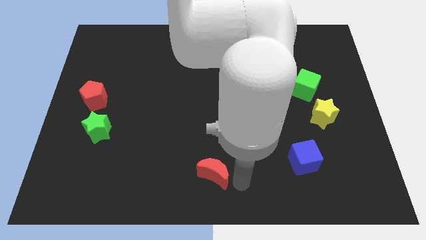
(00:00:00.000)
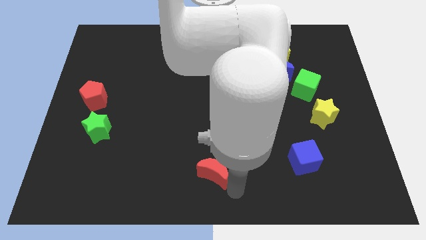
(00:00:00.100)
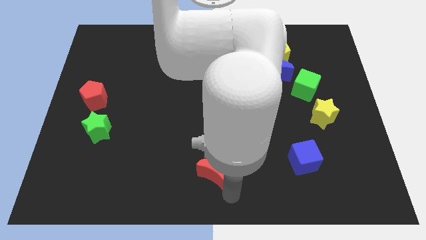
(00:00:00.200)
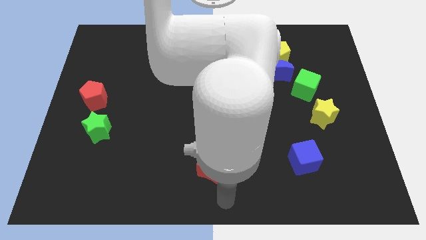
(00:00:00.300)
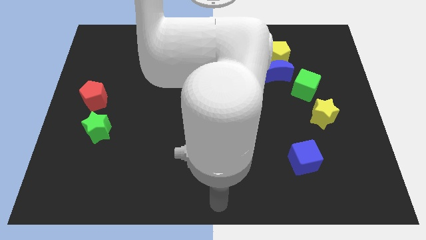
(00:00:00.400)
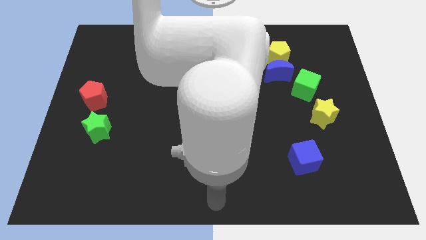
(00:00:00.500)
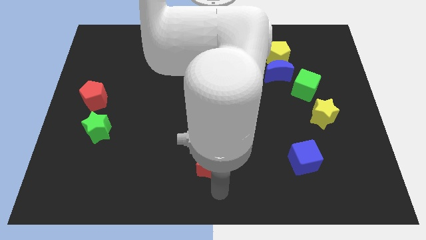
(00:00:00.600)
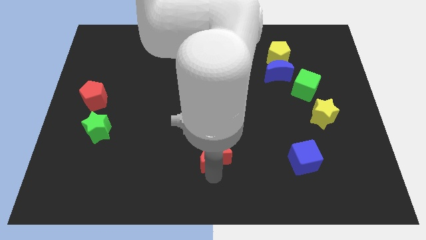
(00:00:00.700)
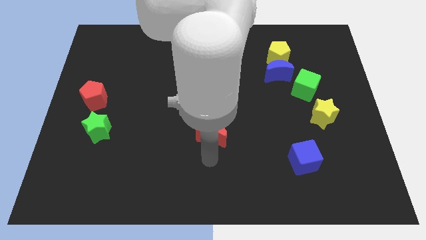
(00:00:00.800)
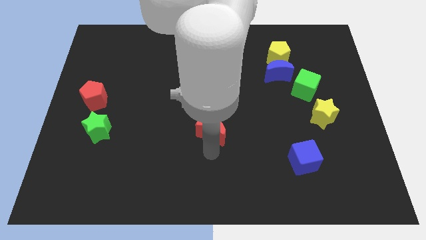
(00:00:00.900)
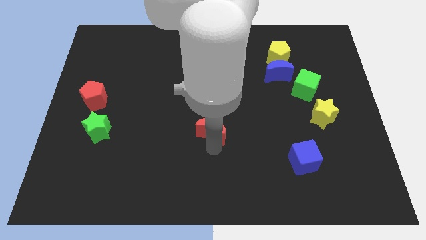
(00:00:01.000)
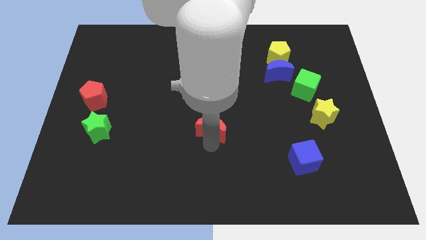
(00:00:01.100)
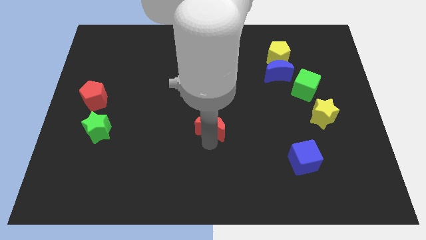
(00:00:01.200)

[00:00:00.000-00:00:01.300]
move the red crescent towards the center of the board

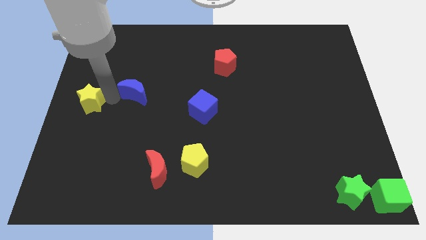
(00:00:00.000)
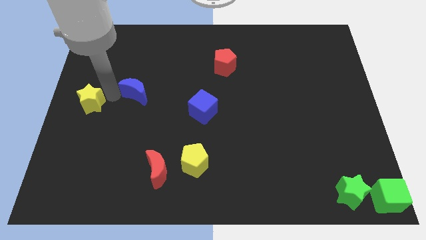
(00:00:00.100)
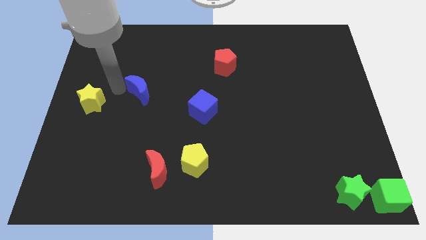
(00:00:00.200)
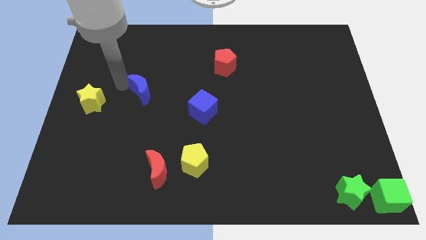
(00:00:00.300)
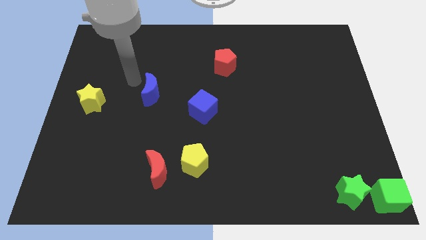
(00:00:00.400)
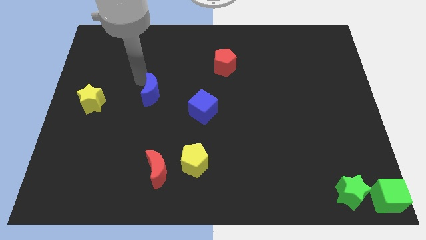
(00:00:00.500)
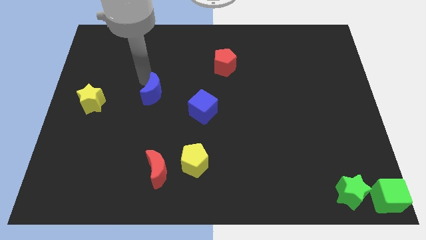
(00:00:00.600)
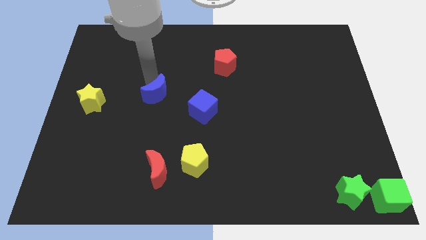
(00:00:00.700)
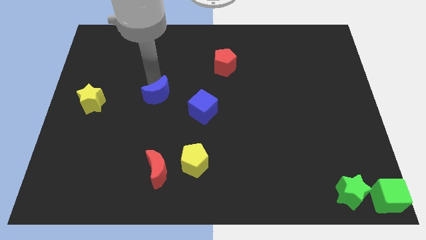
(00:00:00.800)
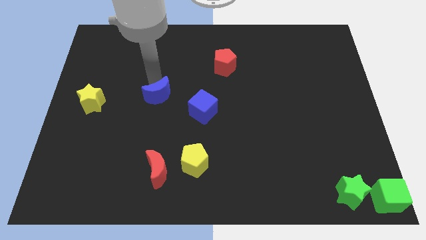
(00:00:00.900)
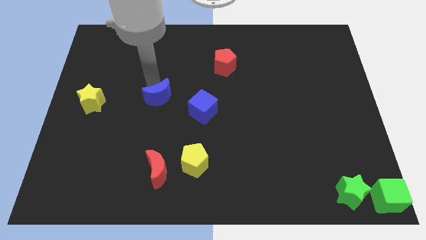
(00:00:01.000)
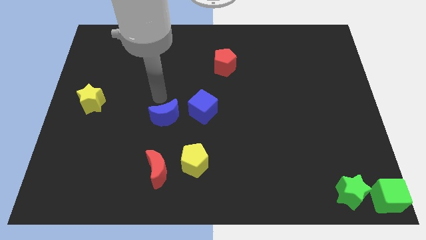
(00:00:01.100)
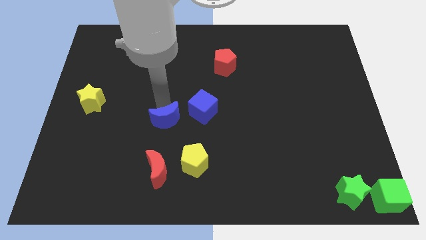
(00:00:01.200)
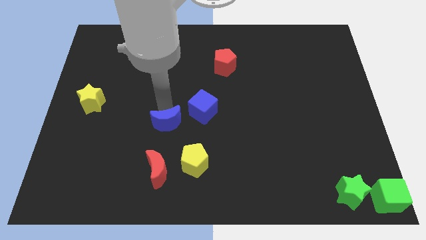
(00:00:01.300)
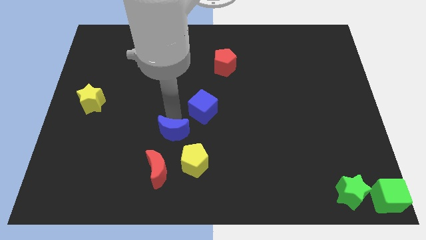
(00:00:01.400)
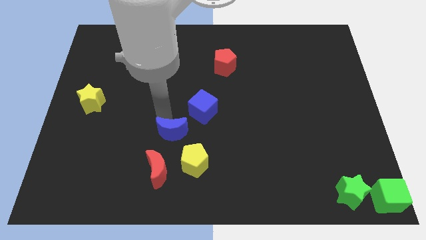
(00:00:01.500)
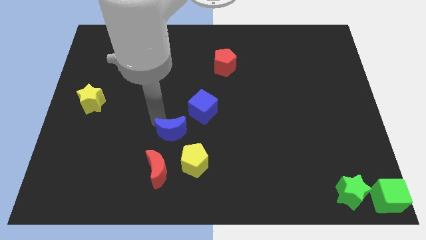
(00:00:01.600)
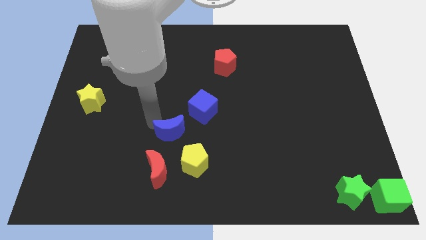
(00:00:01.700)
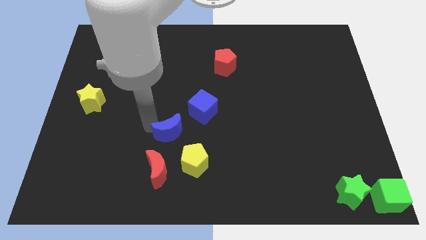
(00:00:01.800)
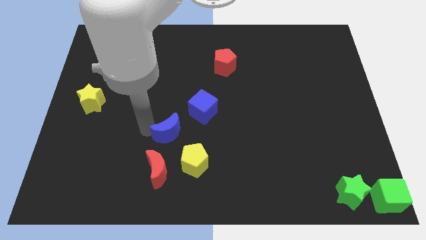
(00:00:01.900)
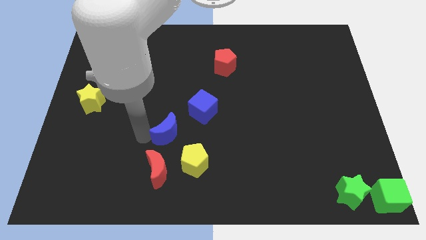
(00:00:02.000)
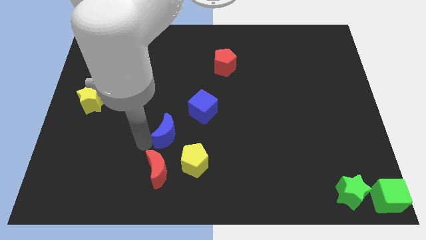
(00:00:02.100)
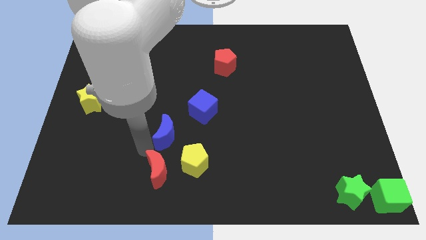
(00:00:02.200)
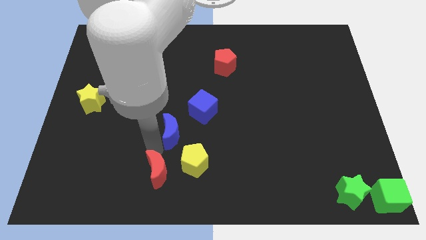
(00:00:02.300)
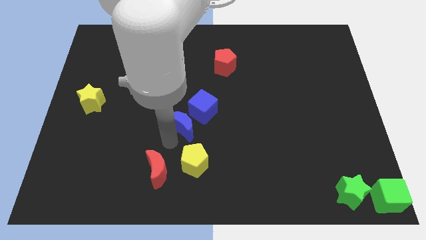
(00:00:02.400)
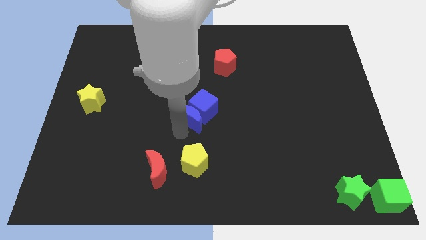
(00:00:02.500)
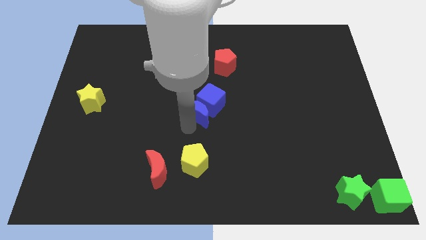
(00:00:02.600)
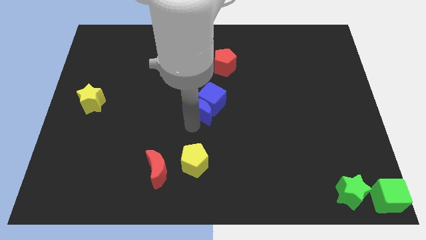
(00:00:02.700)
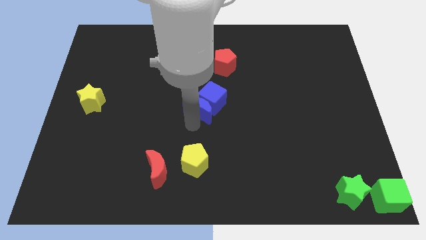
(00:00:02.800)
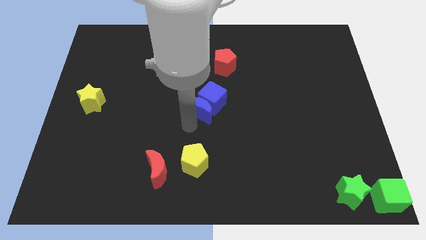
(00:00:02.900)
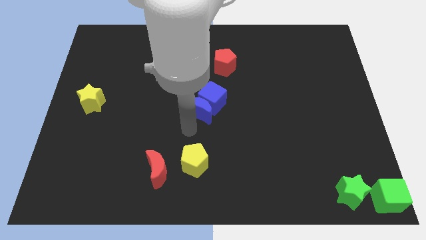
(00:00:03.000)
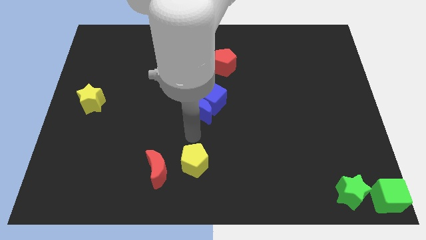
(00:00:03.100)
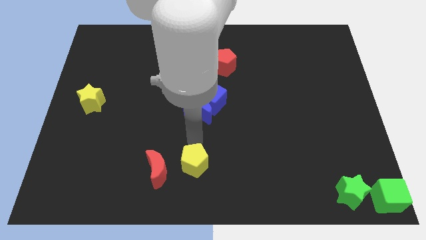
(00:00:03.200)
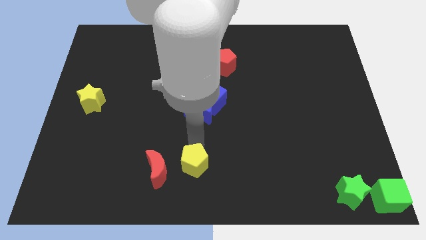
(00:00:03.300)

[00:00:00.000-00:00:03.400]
move the blue crescent below the blue cube

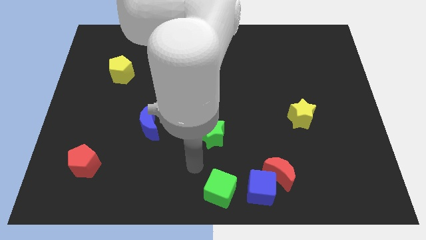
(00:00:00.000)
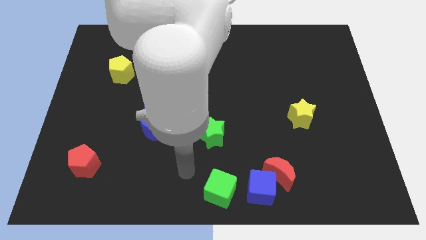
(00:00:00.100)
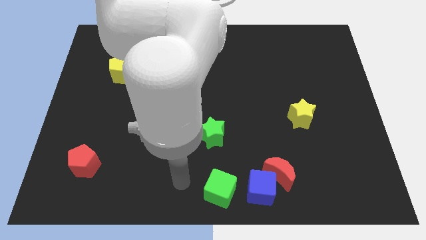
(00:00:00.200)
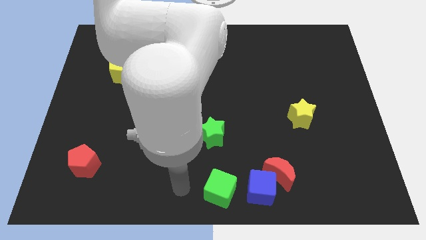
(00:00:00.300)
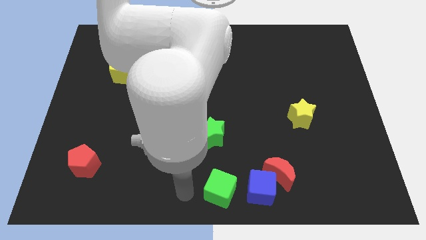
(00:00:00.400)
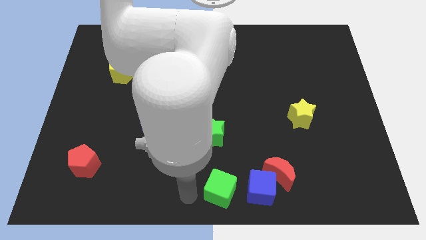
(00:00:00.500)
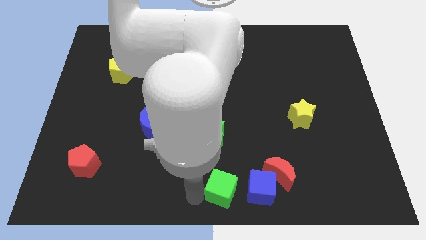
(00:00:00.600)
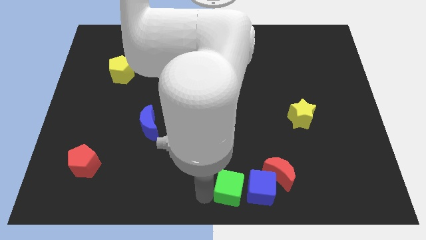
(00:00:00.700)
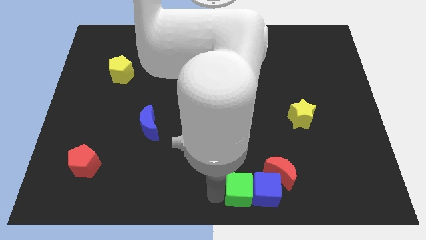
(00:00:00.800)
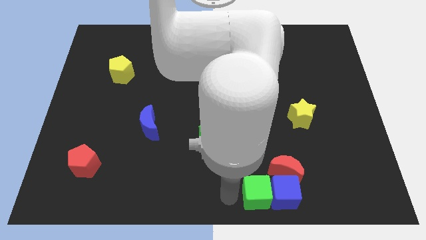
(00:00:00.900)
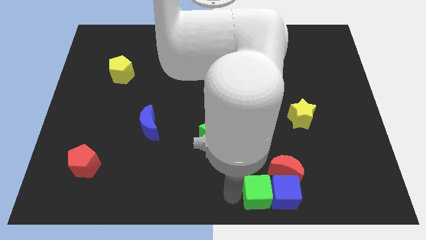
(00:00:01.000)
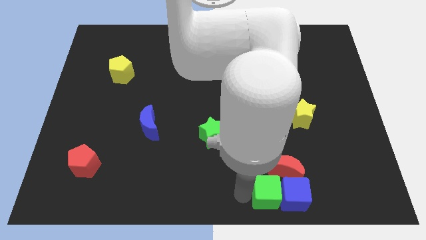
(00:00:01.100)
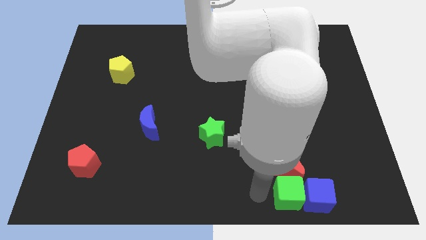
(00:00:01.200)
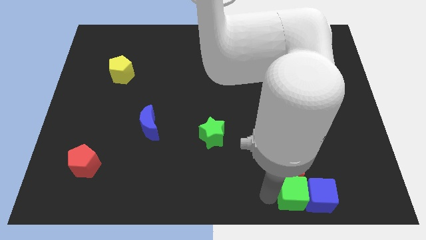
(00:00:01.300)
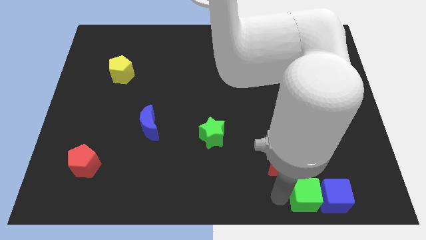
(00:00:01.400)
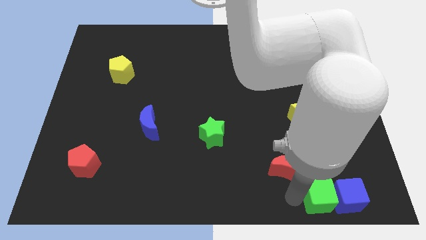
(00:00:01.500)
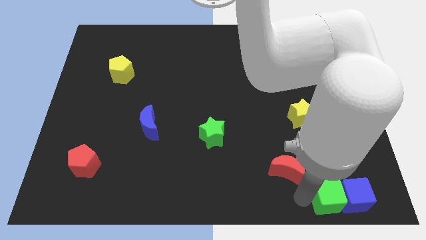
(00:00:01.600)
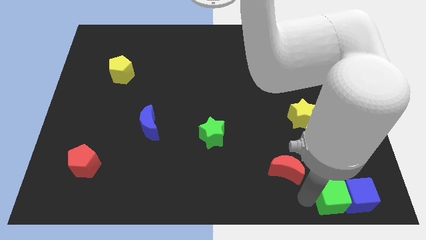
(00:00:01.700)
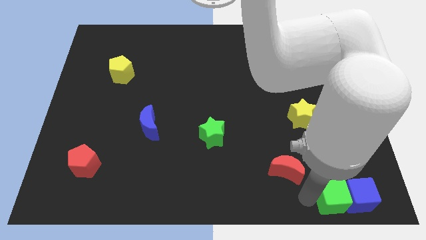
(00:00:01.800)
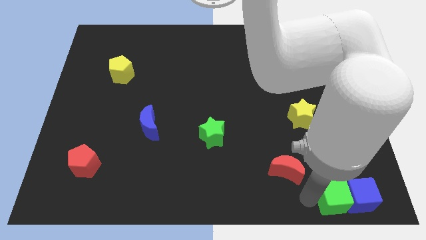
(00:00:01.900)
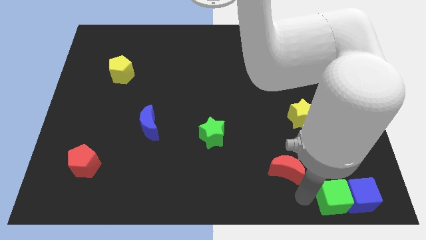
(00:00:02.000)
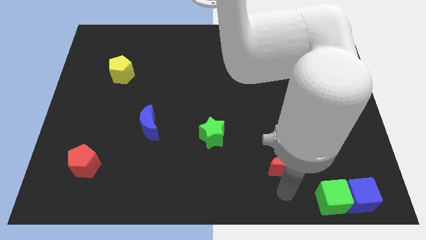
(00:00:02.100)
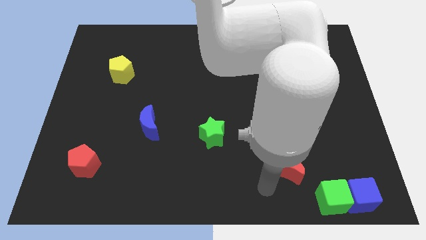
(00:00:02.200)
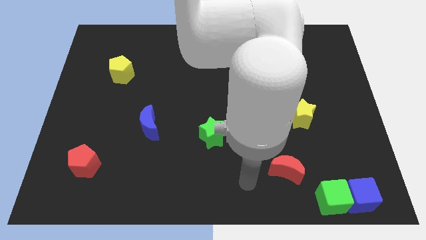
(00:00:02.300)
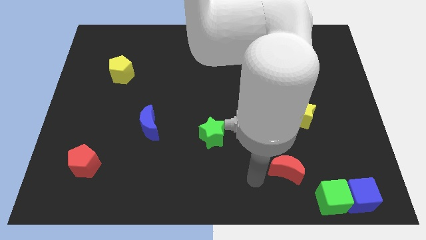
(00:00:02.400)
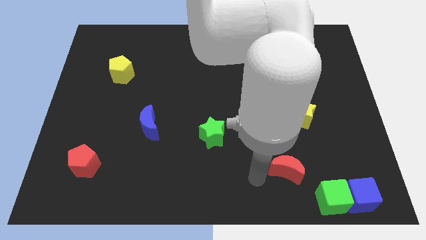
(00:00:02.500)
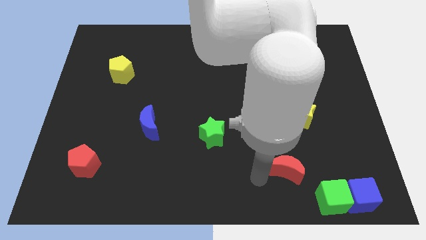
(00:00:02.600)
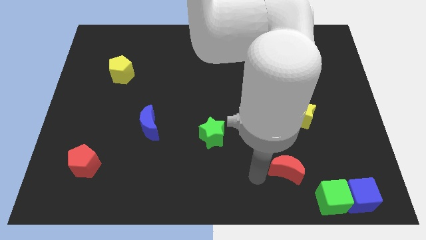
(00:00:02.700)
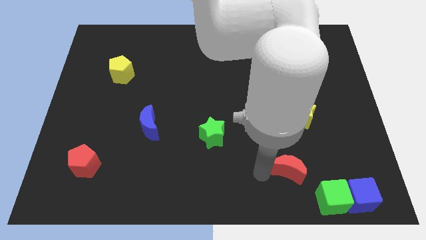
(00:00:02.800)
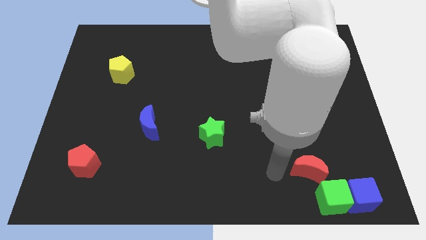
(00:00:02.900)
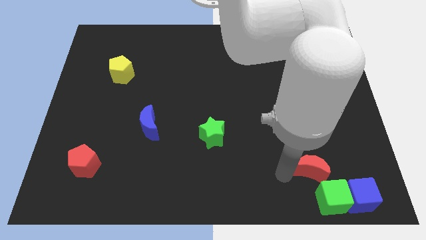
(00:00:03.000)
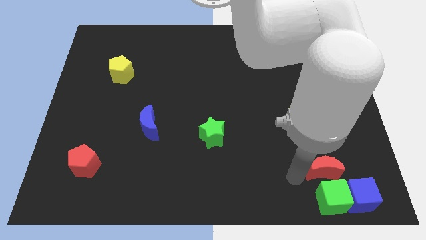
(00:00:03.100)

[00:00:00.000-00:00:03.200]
move the blue cube and green cube towards the bottom right corner of the board

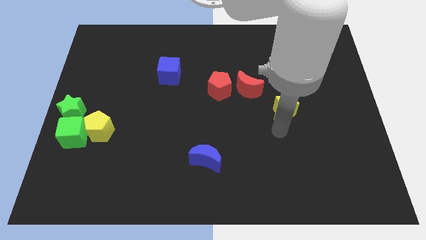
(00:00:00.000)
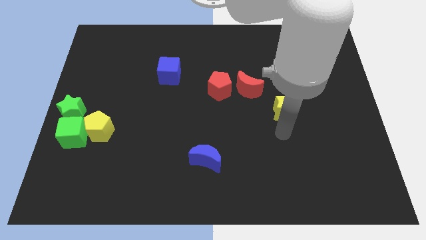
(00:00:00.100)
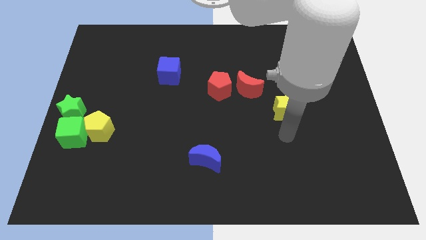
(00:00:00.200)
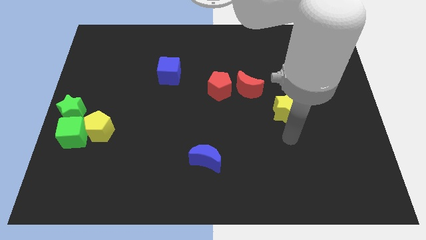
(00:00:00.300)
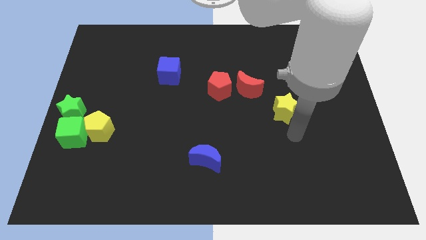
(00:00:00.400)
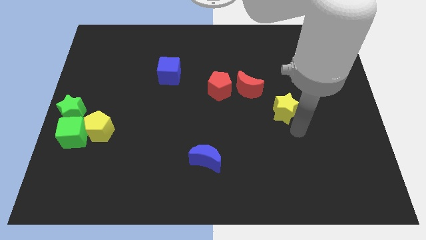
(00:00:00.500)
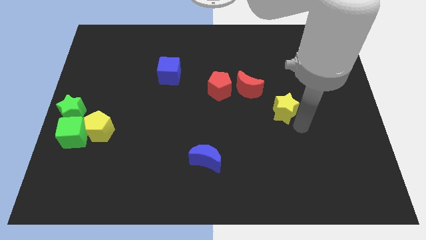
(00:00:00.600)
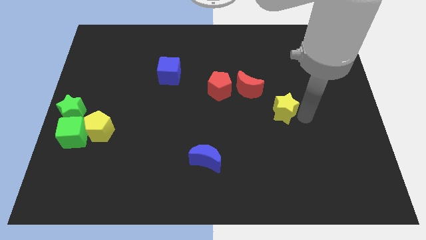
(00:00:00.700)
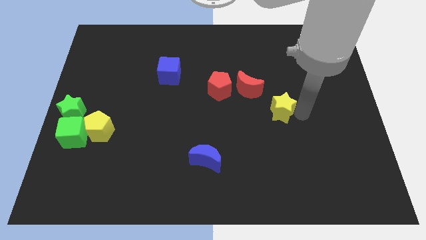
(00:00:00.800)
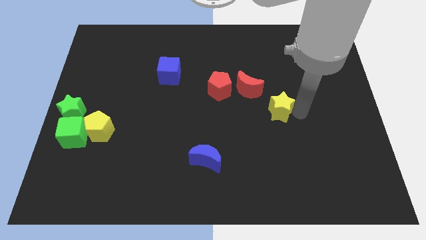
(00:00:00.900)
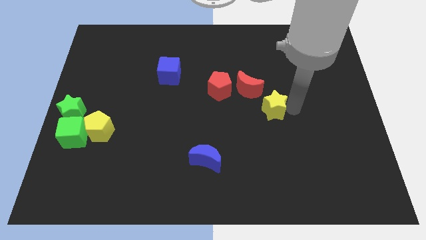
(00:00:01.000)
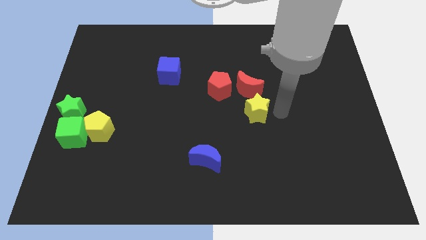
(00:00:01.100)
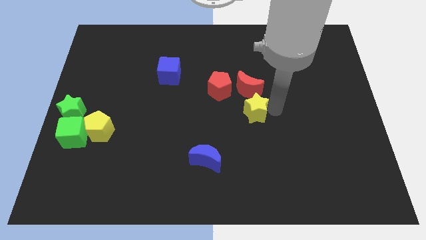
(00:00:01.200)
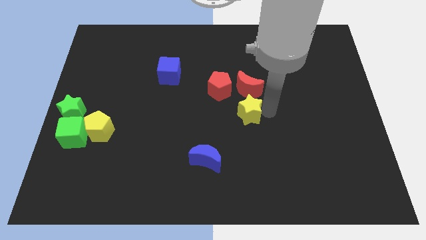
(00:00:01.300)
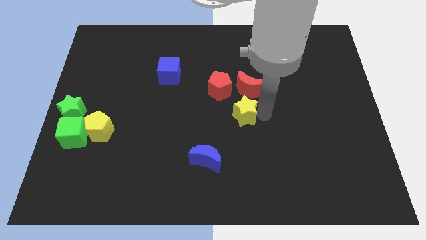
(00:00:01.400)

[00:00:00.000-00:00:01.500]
move the yellow star to the bottom of the red crescent
